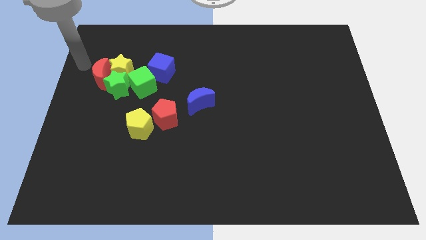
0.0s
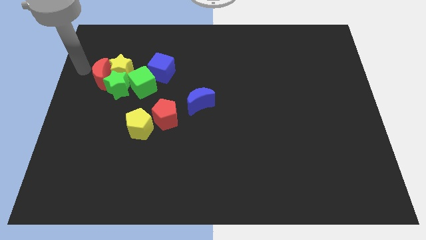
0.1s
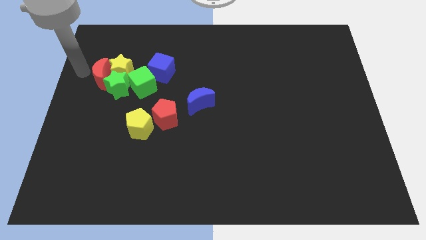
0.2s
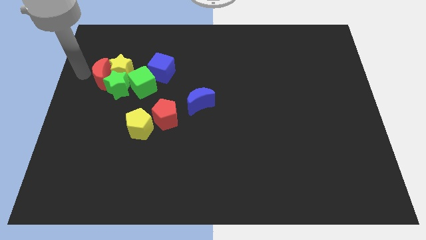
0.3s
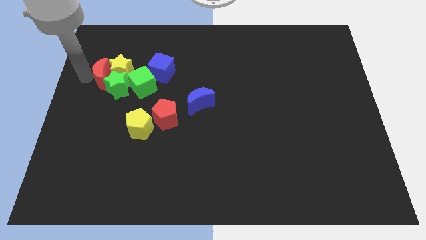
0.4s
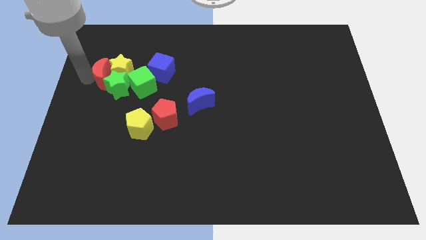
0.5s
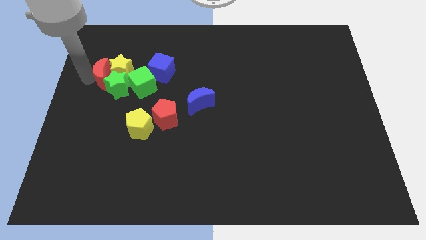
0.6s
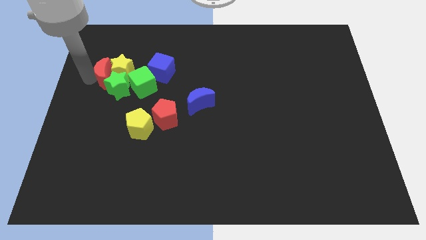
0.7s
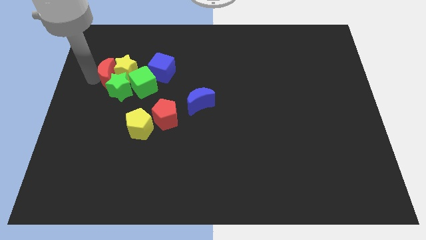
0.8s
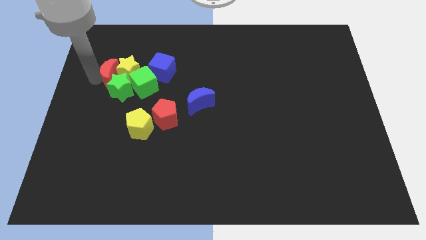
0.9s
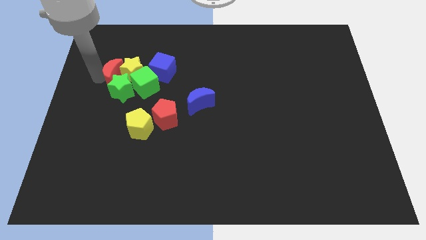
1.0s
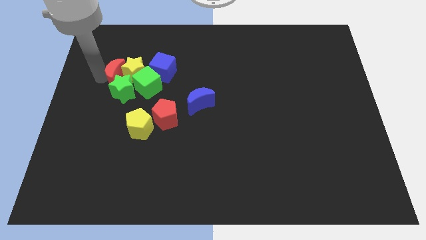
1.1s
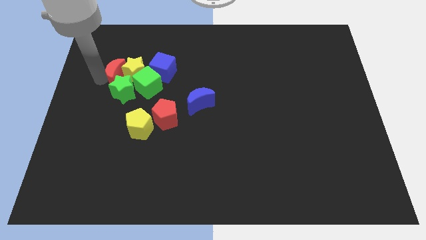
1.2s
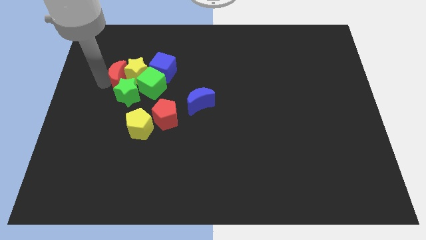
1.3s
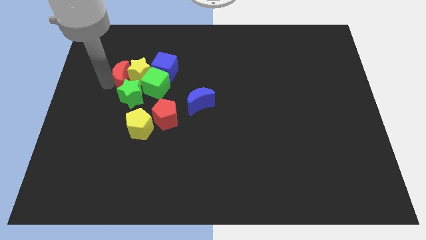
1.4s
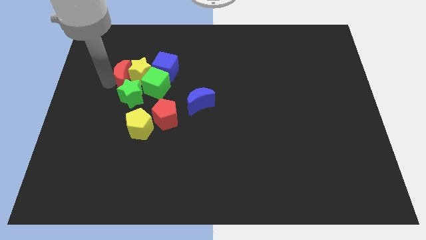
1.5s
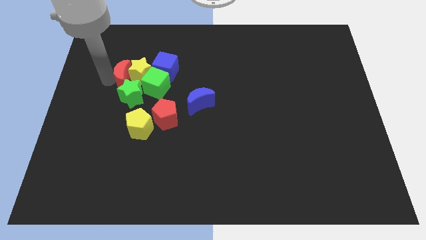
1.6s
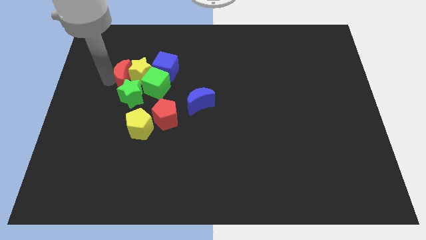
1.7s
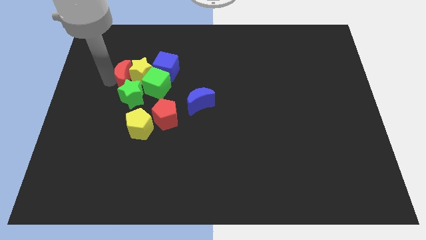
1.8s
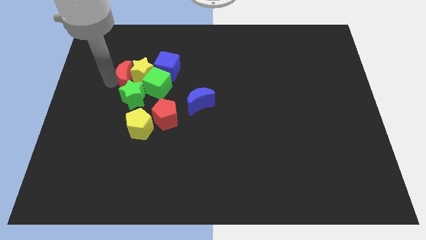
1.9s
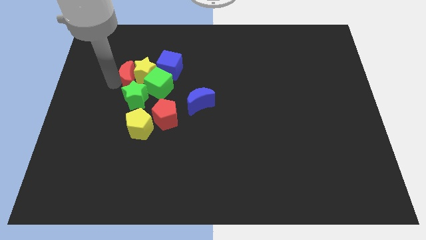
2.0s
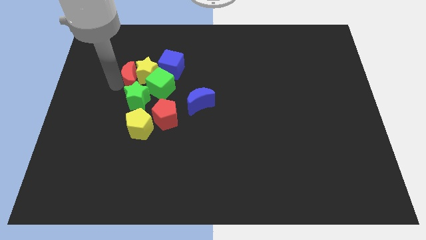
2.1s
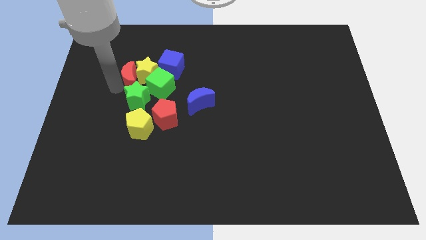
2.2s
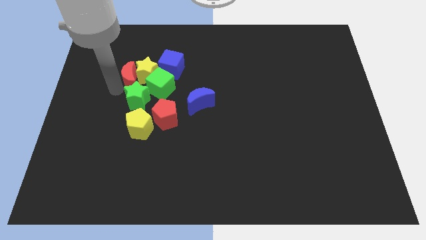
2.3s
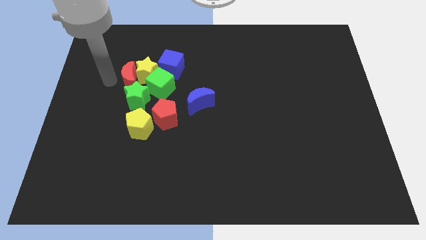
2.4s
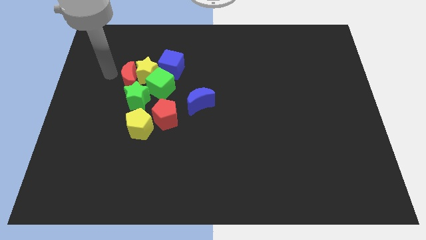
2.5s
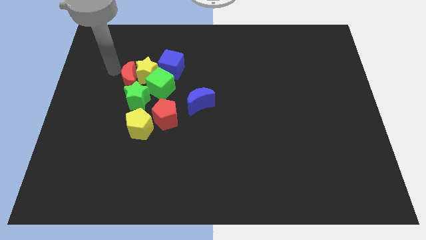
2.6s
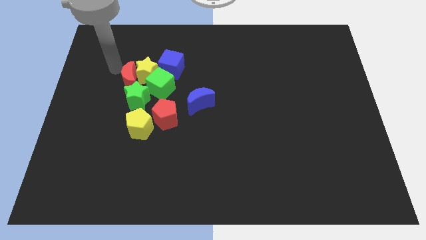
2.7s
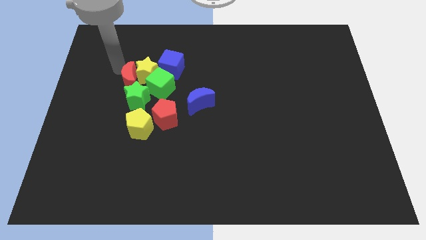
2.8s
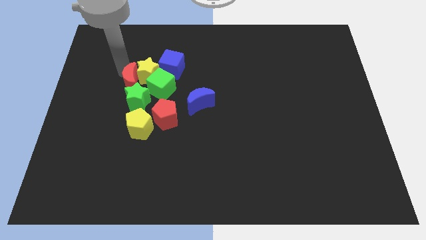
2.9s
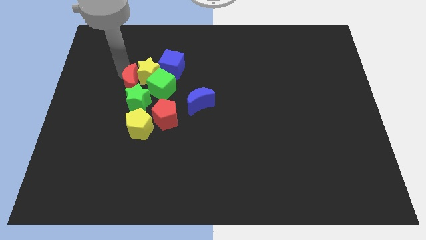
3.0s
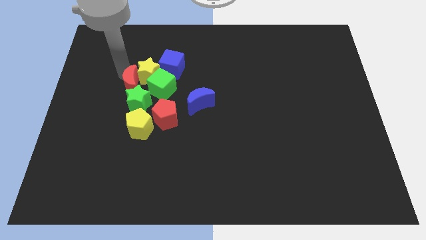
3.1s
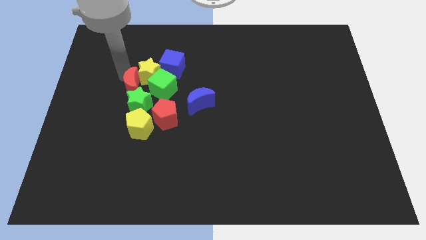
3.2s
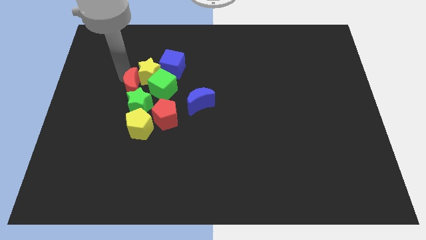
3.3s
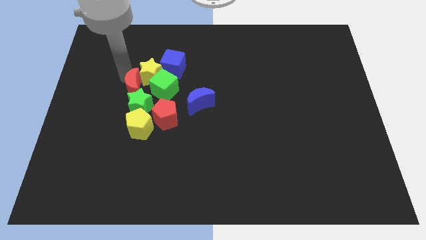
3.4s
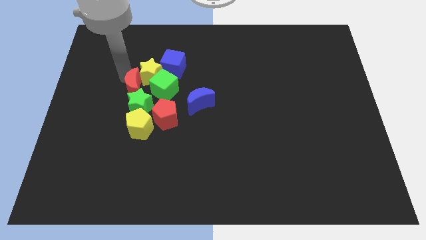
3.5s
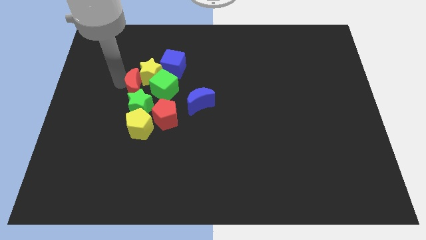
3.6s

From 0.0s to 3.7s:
push the group of blocks to the center of the board

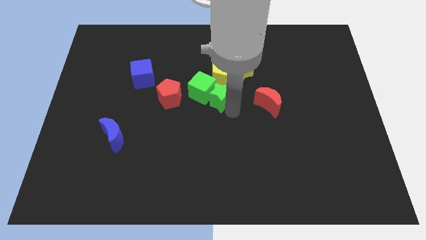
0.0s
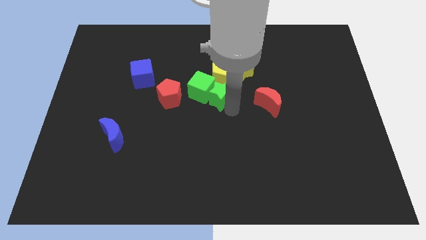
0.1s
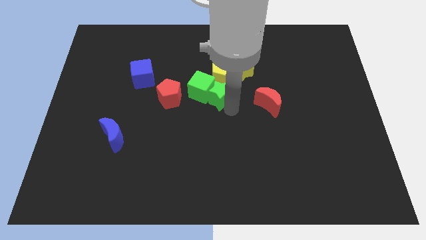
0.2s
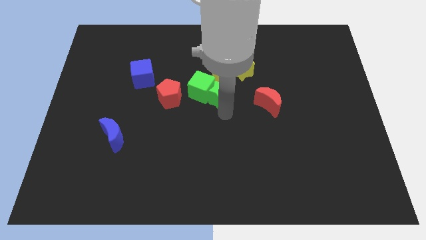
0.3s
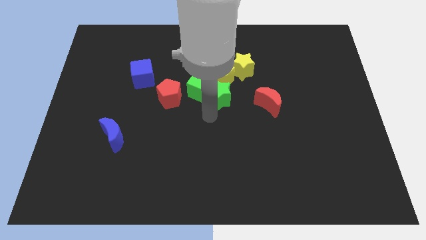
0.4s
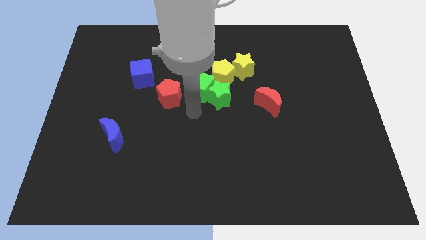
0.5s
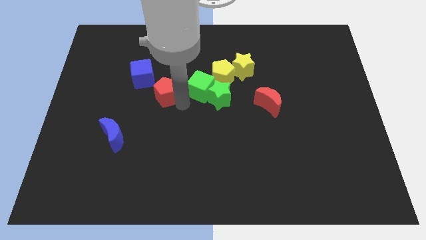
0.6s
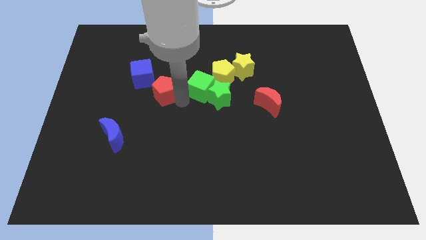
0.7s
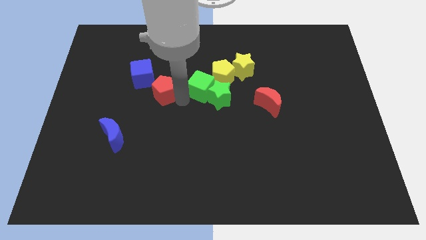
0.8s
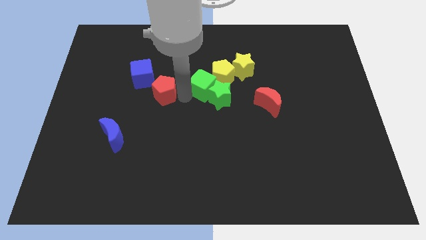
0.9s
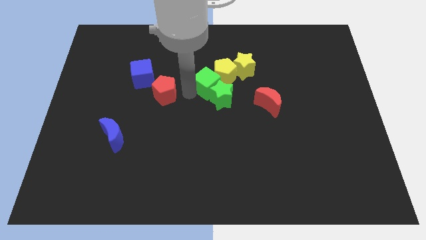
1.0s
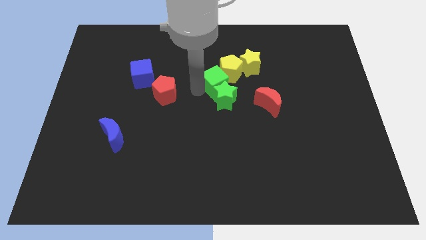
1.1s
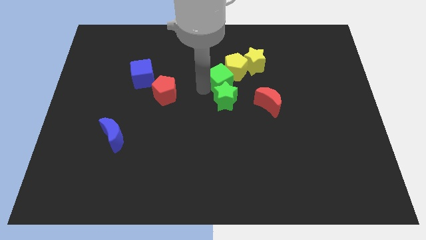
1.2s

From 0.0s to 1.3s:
push the group of blocks towards top right of the board

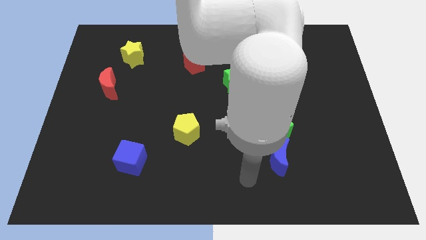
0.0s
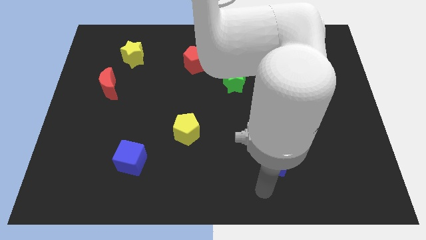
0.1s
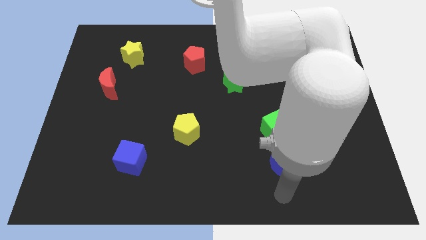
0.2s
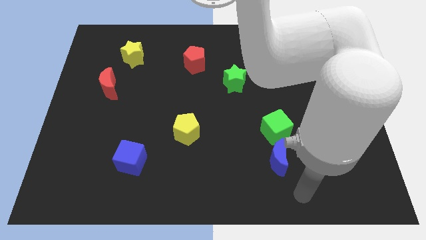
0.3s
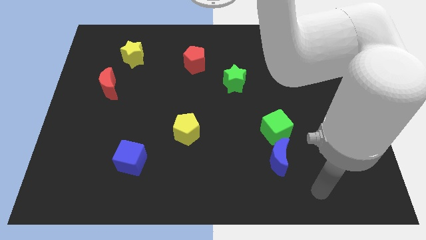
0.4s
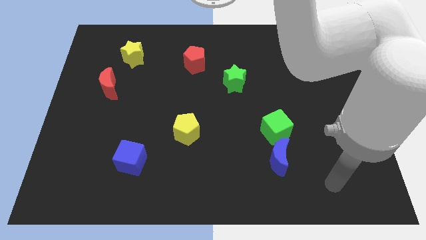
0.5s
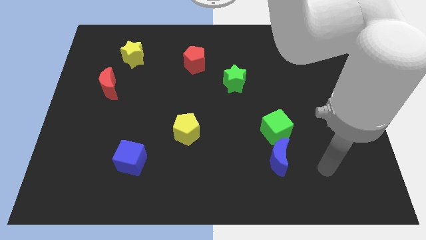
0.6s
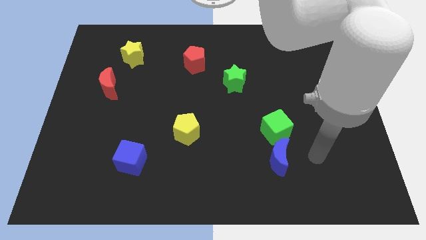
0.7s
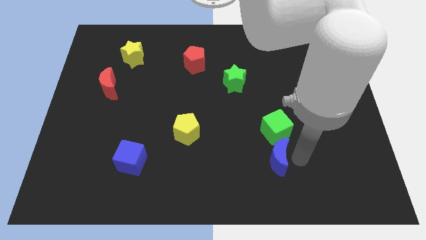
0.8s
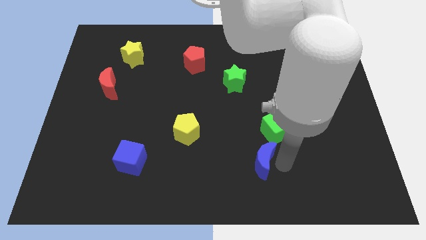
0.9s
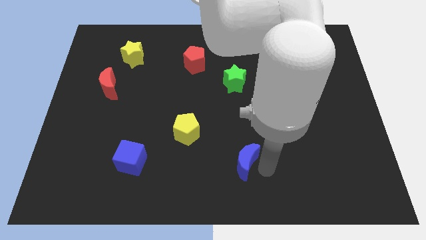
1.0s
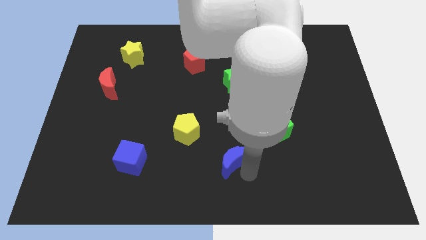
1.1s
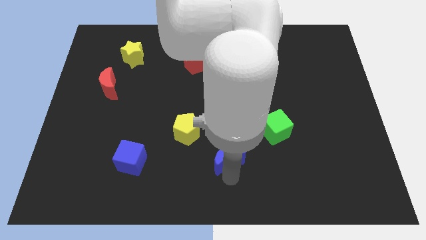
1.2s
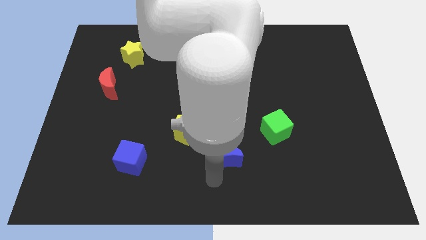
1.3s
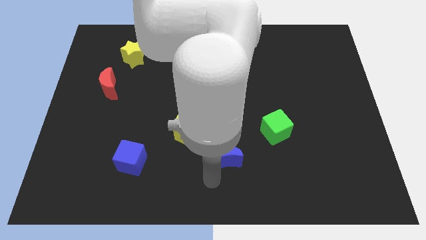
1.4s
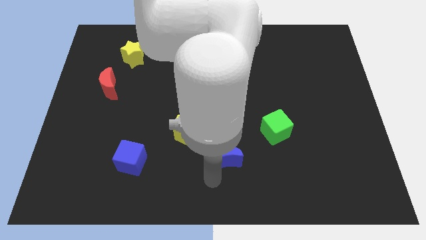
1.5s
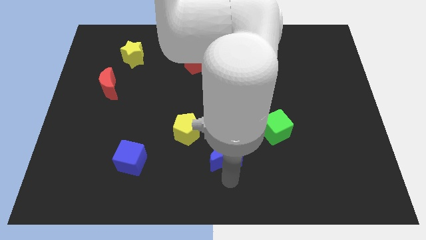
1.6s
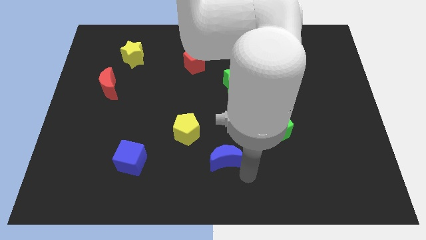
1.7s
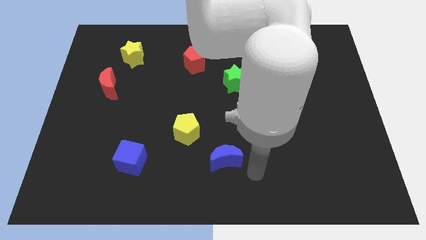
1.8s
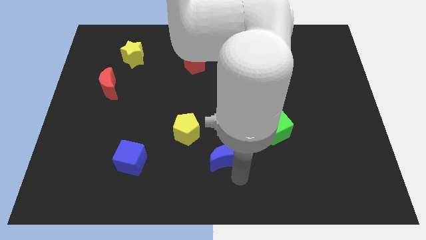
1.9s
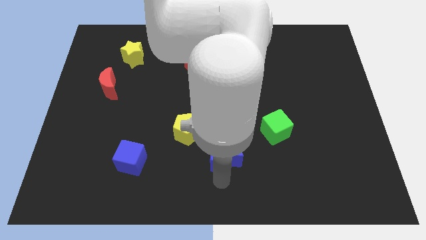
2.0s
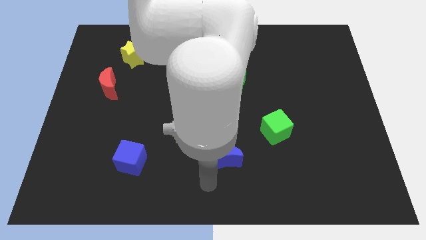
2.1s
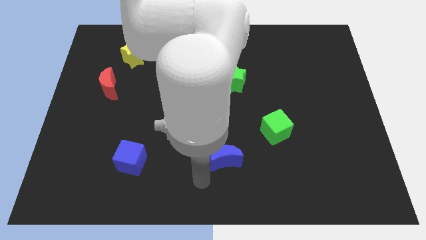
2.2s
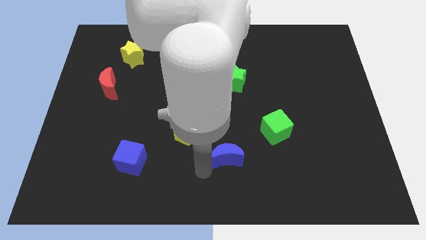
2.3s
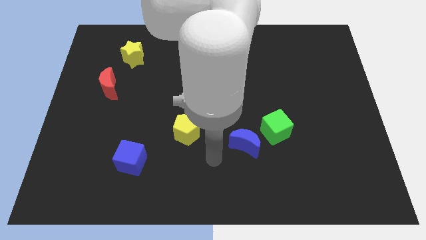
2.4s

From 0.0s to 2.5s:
place the blue moon to the right of the blue cube

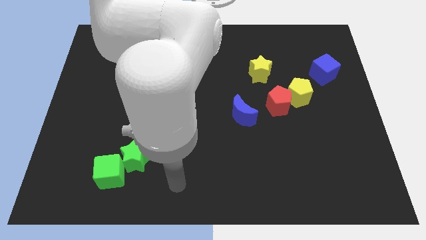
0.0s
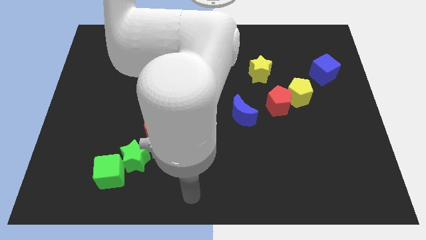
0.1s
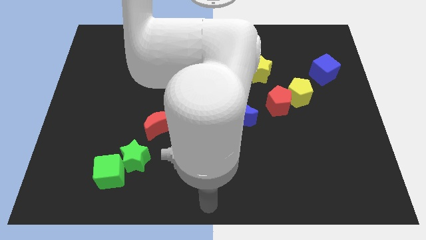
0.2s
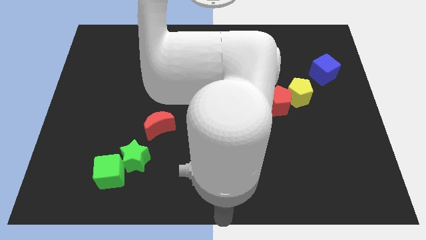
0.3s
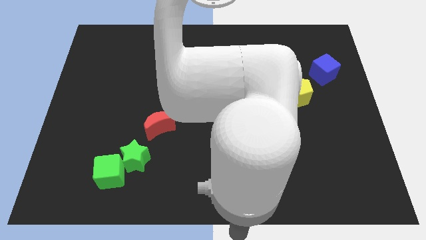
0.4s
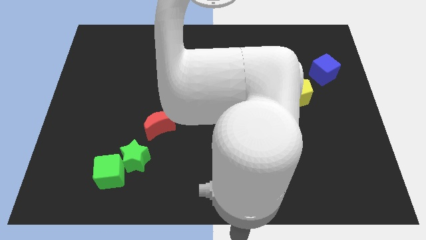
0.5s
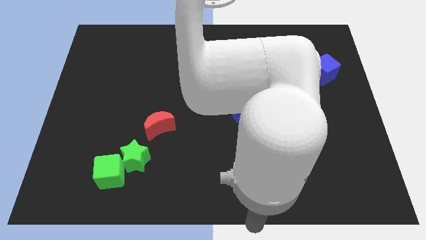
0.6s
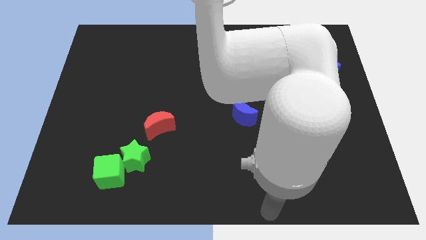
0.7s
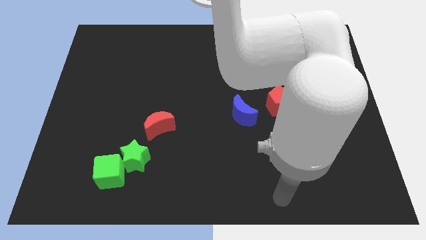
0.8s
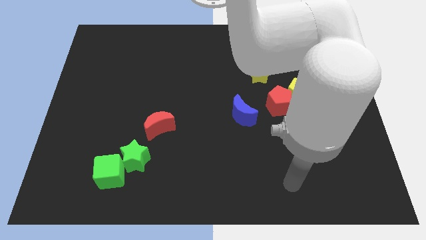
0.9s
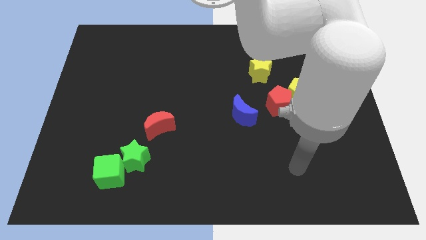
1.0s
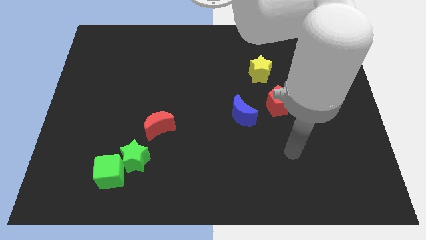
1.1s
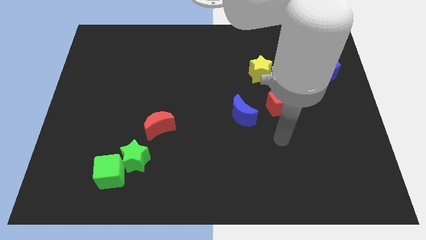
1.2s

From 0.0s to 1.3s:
place your arm to the bottom side of the red pentagon

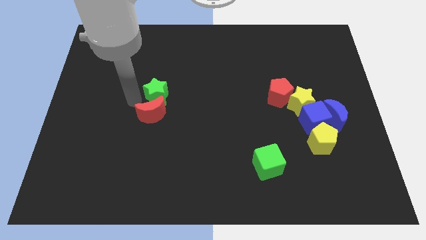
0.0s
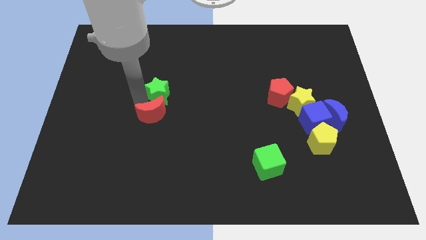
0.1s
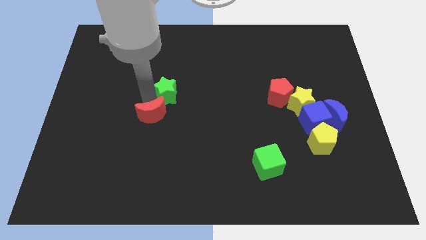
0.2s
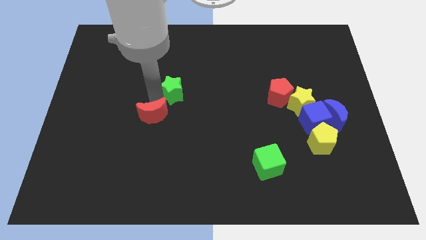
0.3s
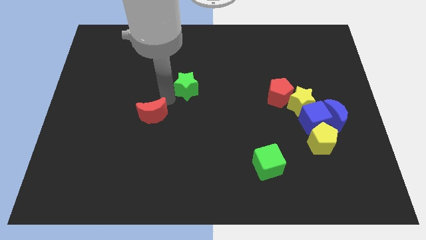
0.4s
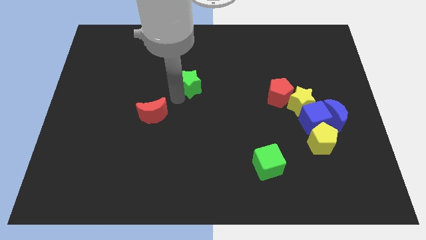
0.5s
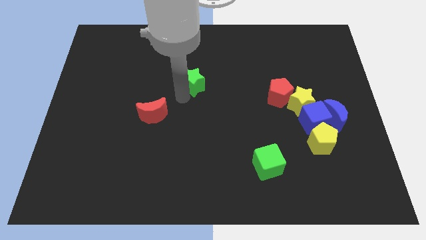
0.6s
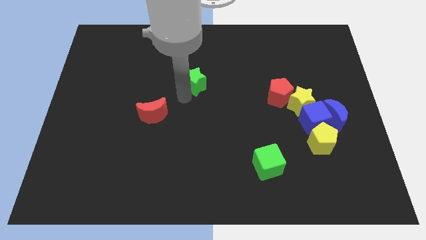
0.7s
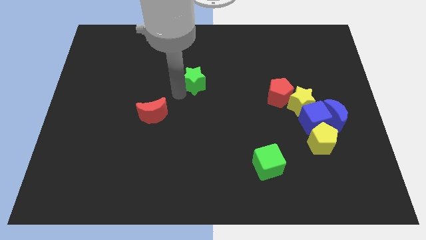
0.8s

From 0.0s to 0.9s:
separate the green star from the red crescent
